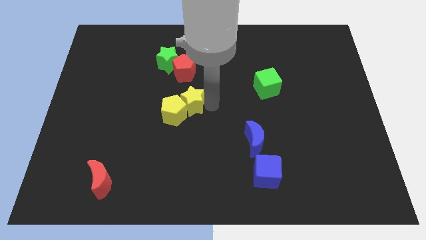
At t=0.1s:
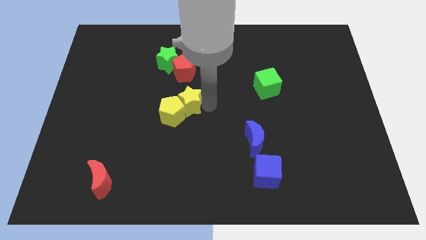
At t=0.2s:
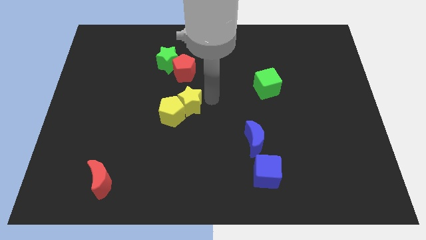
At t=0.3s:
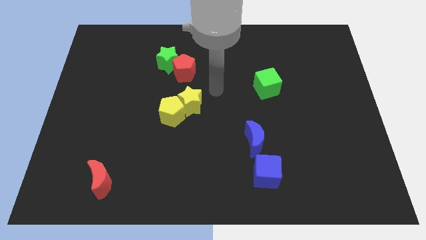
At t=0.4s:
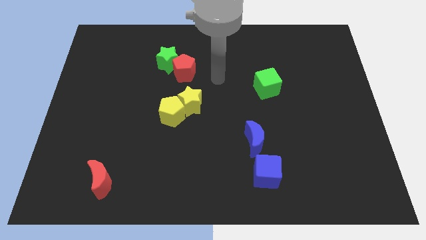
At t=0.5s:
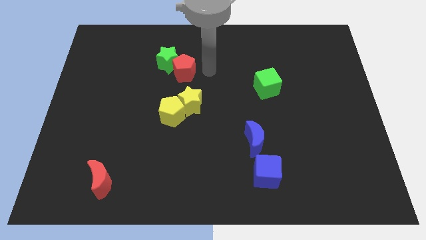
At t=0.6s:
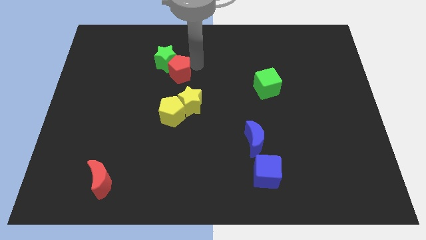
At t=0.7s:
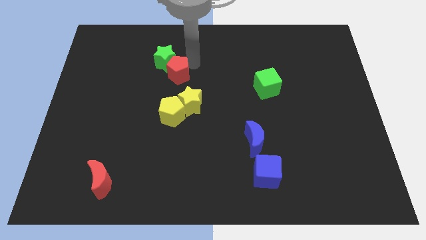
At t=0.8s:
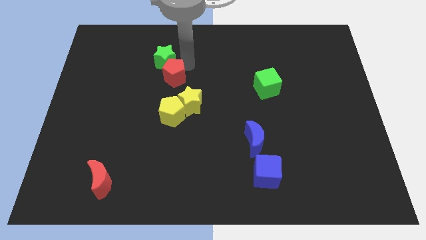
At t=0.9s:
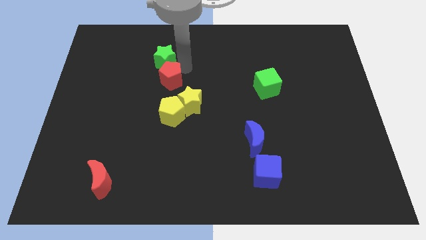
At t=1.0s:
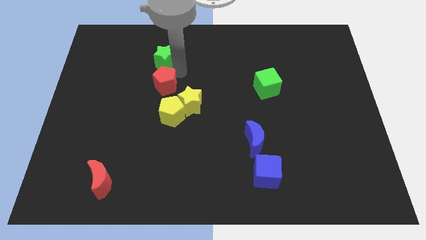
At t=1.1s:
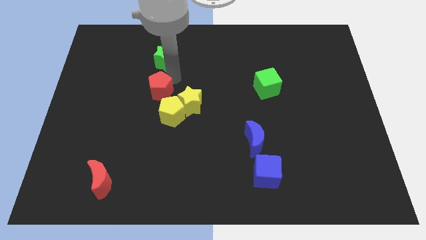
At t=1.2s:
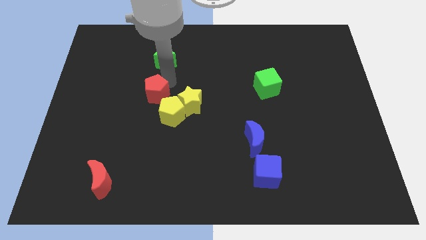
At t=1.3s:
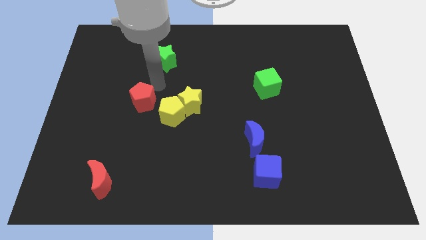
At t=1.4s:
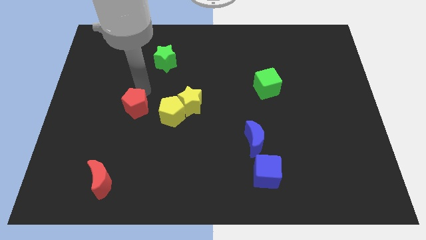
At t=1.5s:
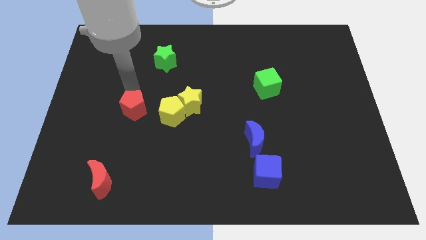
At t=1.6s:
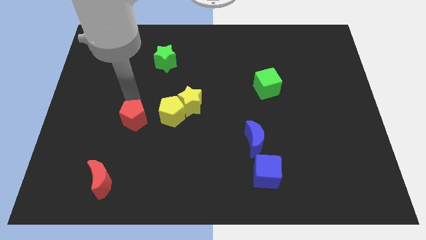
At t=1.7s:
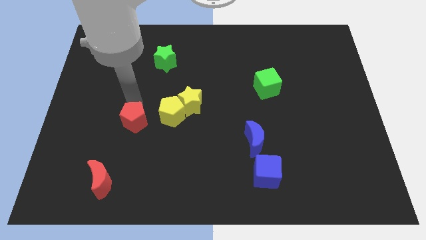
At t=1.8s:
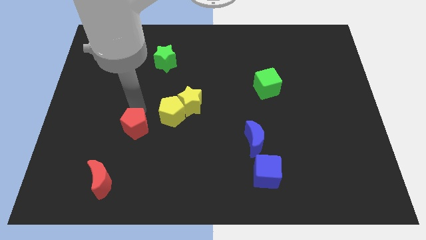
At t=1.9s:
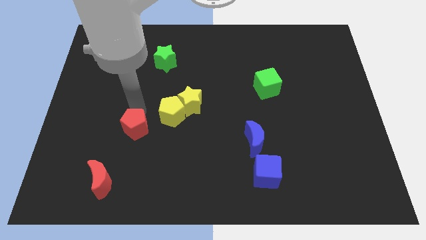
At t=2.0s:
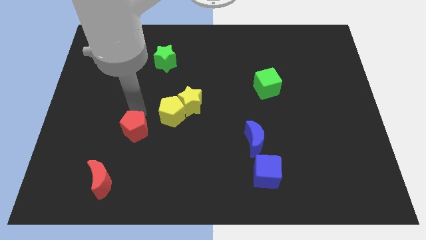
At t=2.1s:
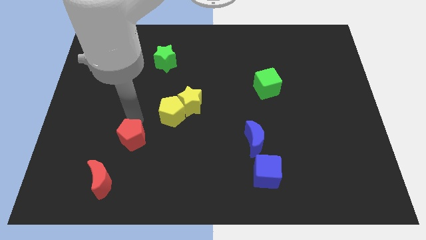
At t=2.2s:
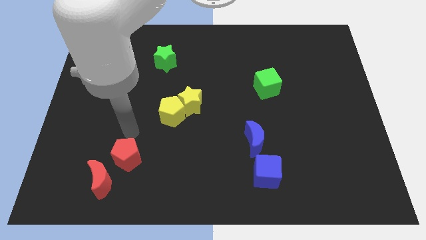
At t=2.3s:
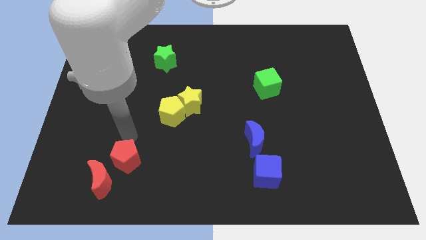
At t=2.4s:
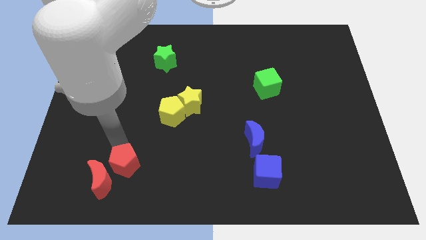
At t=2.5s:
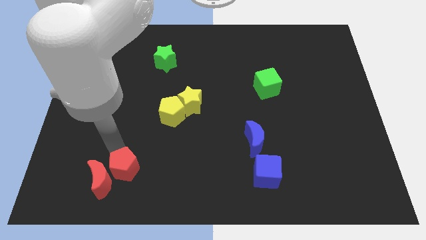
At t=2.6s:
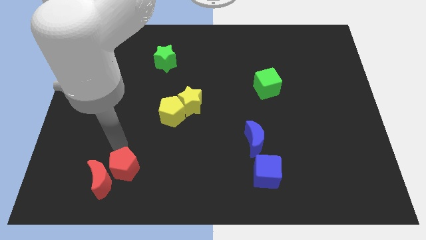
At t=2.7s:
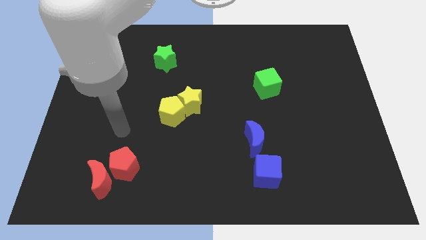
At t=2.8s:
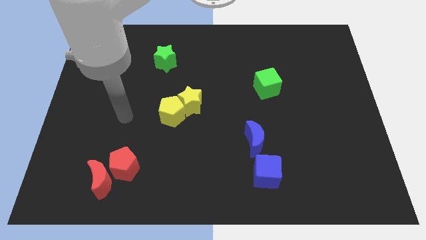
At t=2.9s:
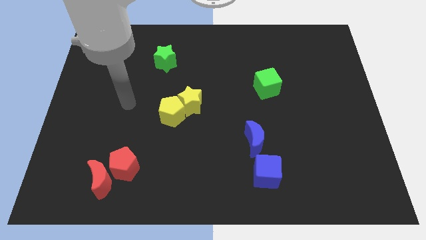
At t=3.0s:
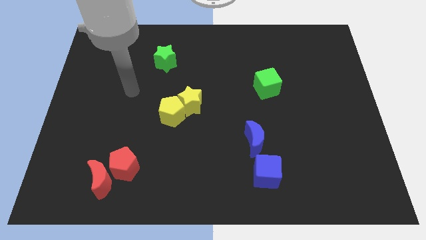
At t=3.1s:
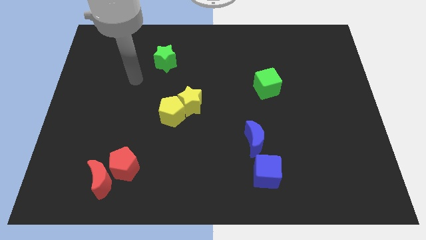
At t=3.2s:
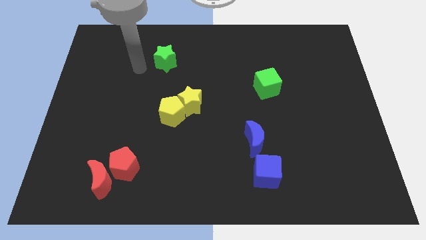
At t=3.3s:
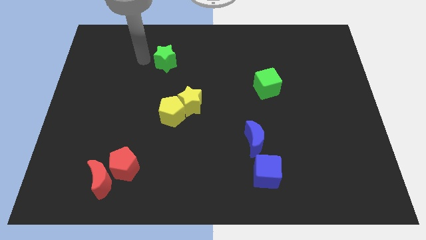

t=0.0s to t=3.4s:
place the red pentagon close to red moon

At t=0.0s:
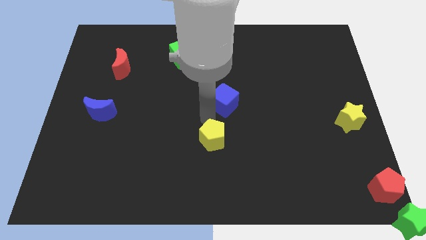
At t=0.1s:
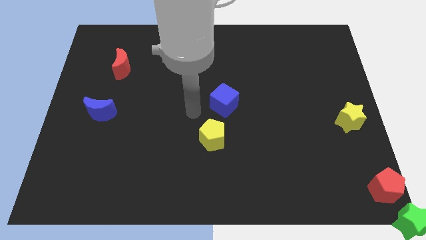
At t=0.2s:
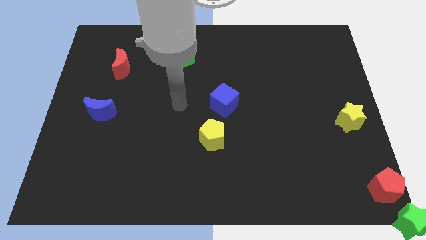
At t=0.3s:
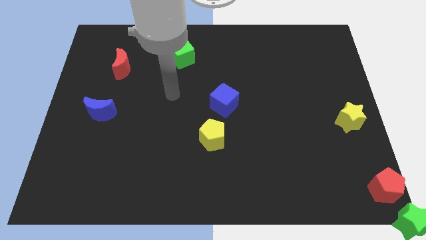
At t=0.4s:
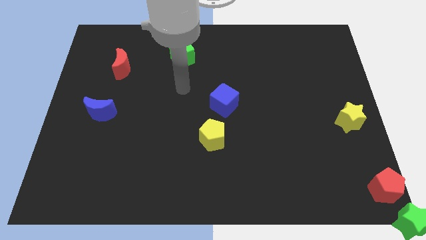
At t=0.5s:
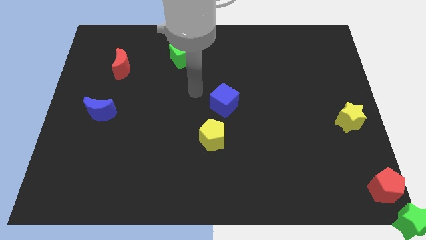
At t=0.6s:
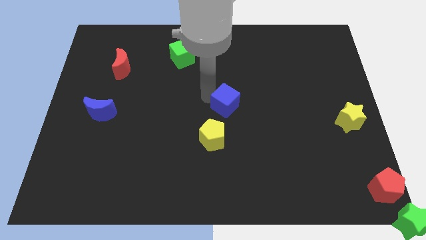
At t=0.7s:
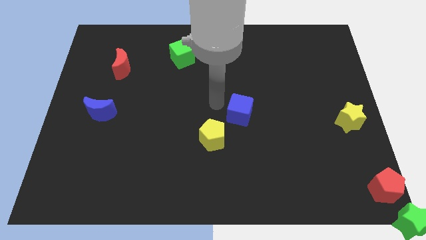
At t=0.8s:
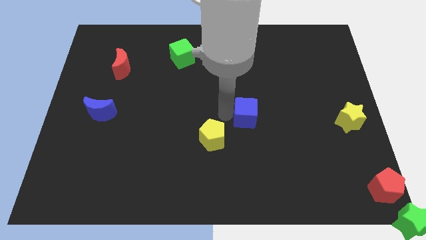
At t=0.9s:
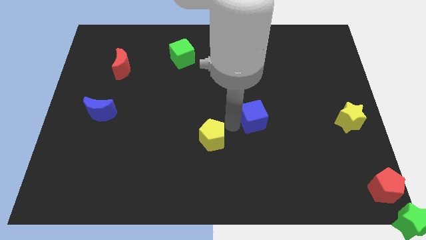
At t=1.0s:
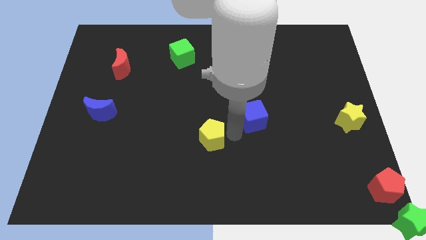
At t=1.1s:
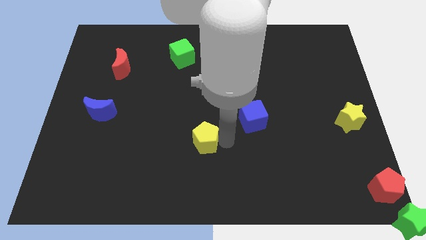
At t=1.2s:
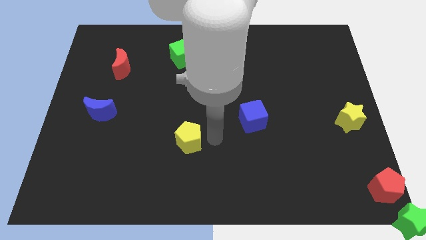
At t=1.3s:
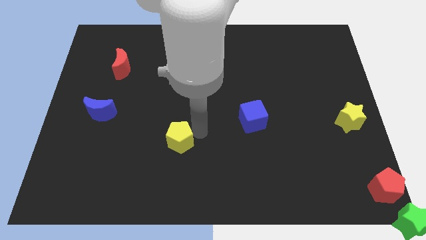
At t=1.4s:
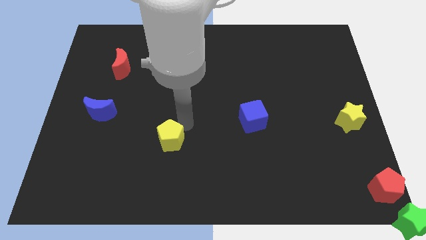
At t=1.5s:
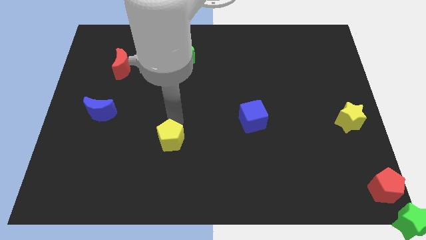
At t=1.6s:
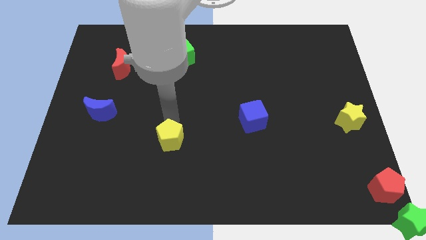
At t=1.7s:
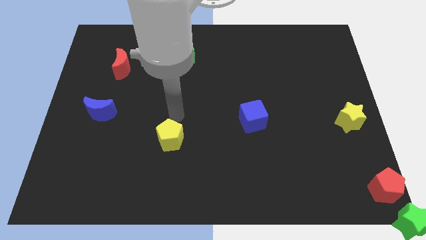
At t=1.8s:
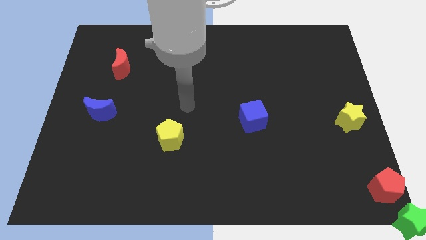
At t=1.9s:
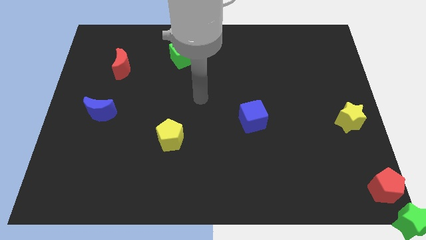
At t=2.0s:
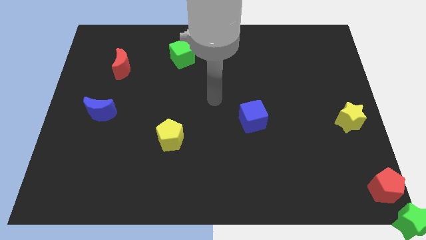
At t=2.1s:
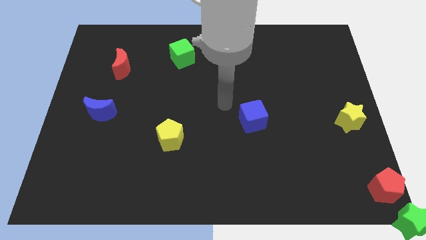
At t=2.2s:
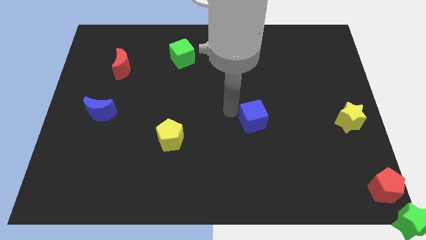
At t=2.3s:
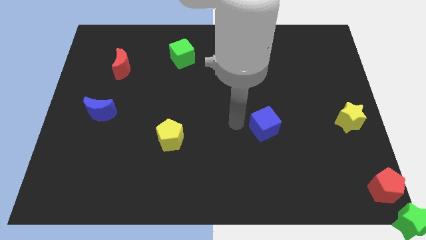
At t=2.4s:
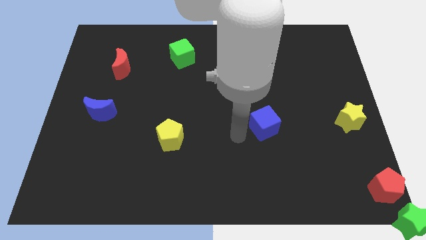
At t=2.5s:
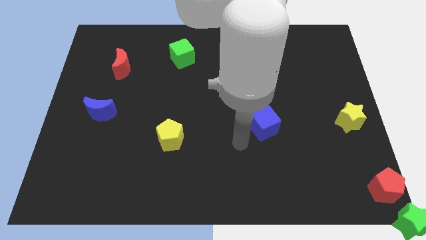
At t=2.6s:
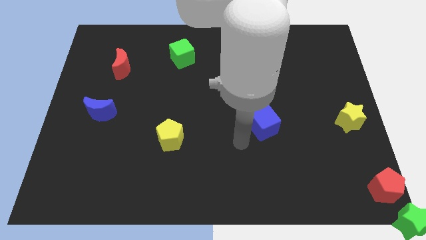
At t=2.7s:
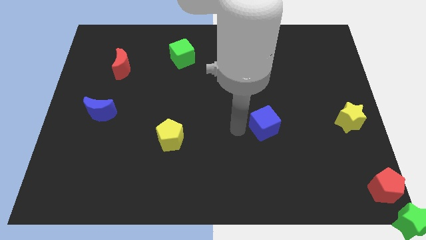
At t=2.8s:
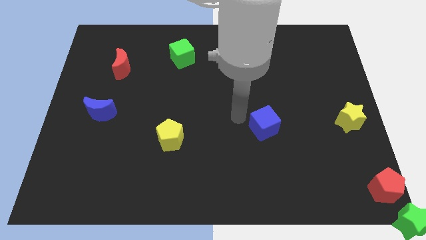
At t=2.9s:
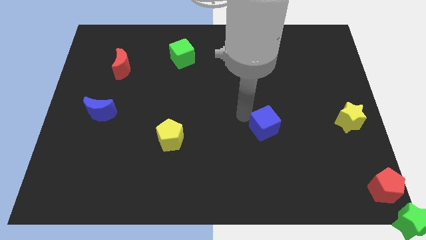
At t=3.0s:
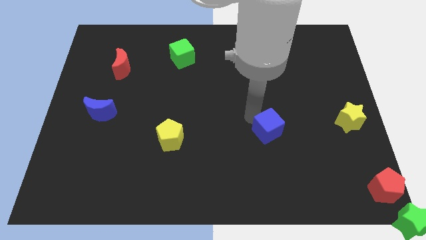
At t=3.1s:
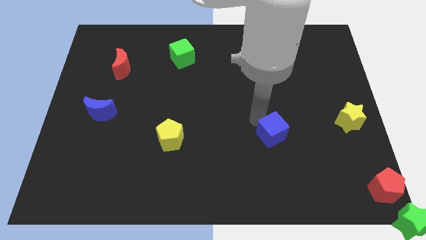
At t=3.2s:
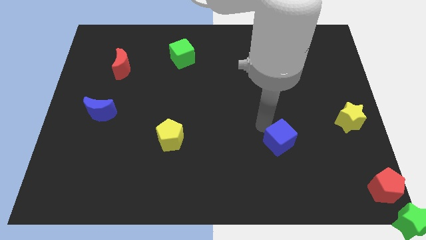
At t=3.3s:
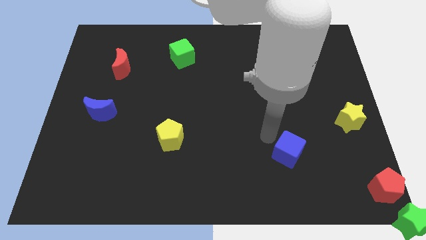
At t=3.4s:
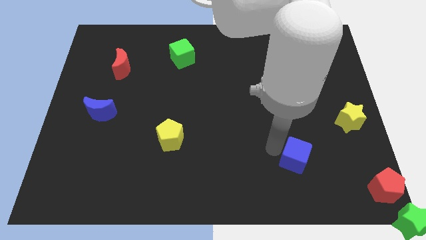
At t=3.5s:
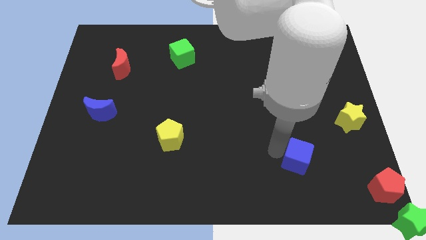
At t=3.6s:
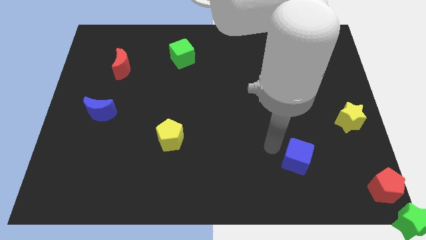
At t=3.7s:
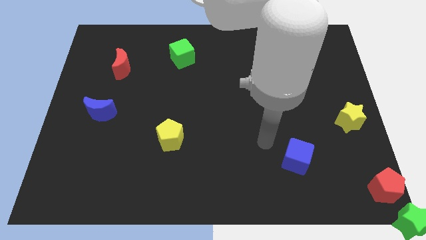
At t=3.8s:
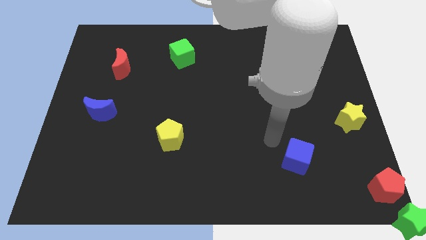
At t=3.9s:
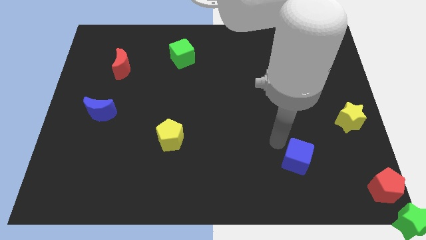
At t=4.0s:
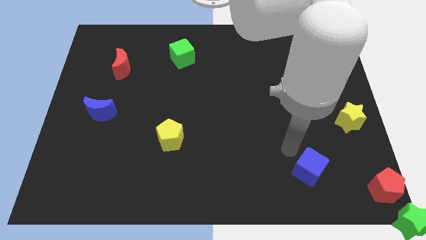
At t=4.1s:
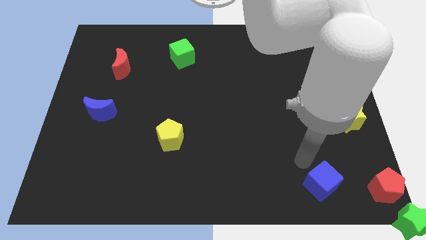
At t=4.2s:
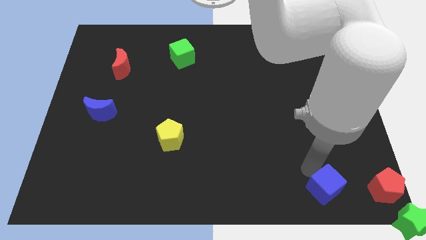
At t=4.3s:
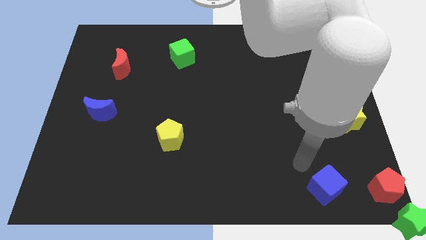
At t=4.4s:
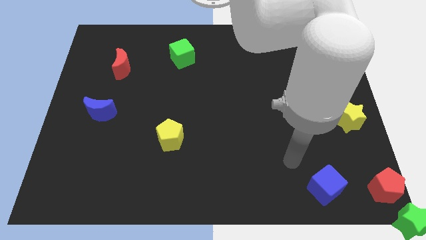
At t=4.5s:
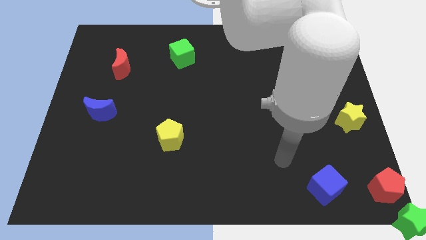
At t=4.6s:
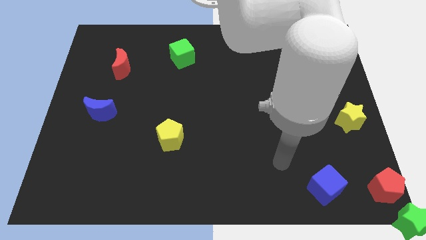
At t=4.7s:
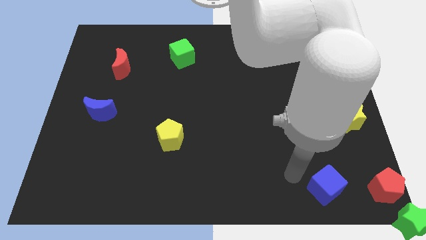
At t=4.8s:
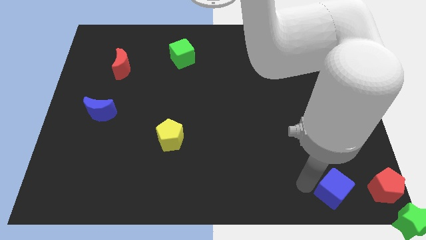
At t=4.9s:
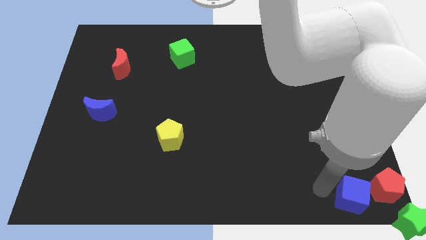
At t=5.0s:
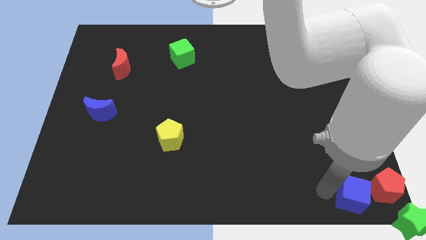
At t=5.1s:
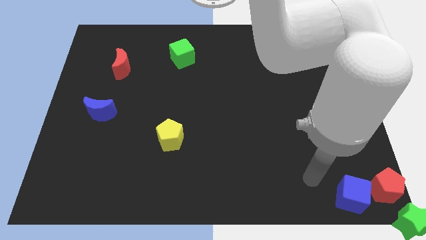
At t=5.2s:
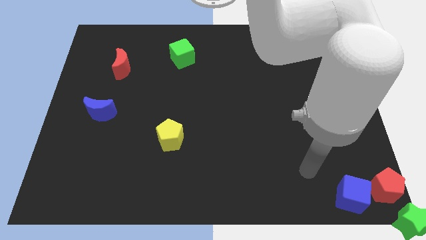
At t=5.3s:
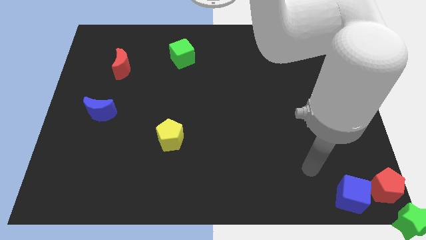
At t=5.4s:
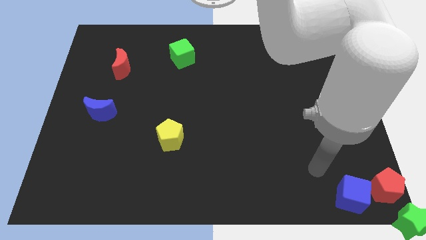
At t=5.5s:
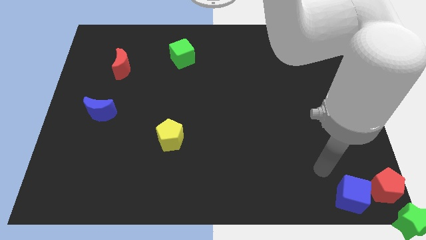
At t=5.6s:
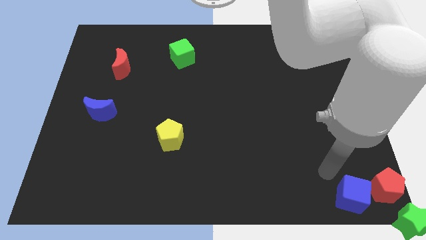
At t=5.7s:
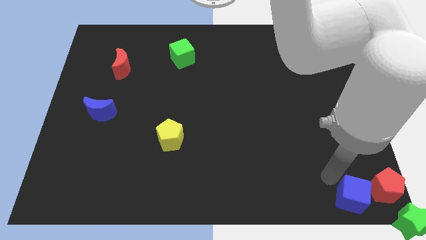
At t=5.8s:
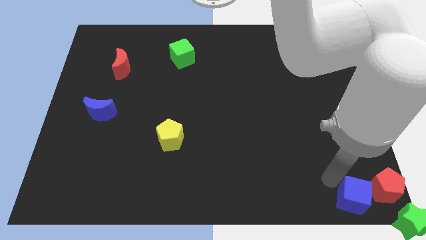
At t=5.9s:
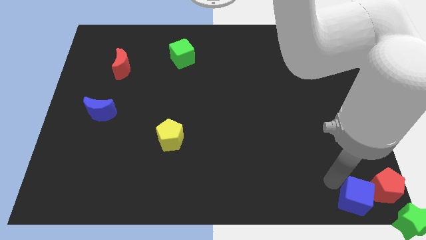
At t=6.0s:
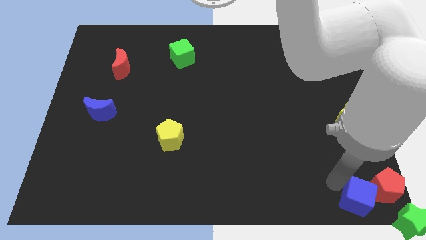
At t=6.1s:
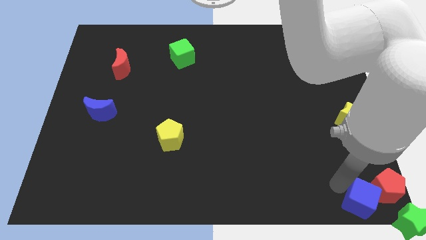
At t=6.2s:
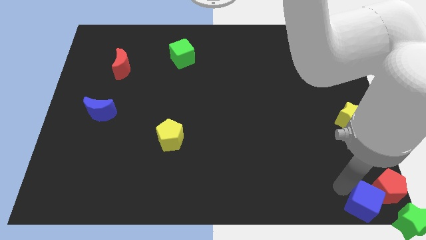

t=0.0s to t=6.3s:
push the blue cube into the red pentagon
